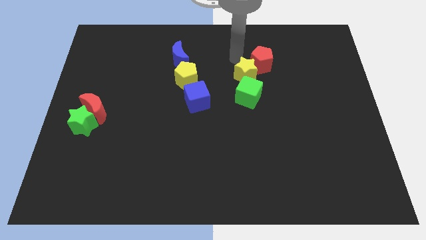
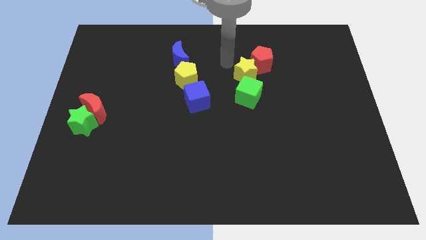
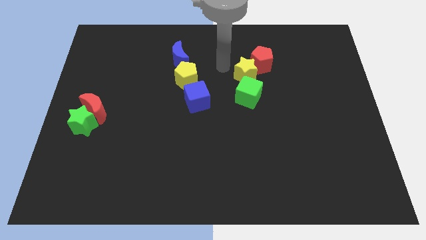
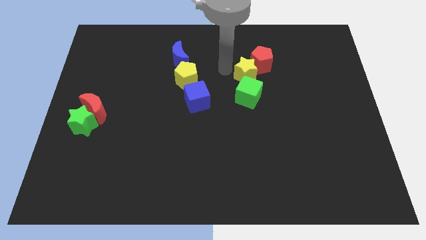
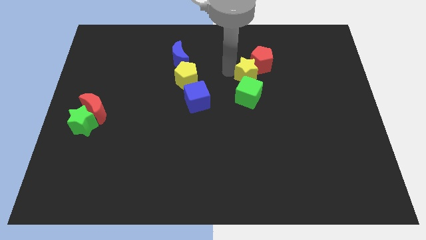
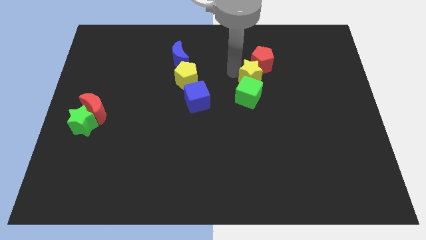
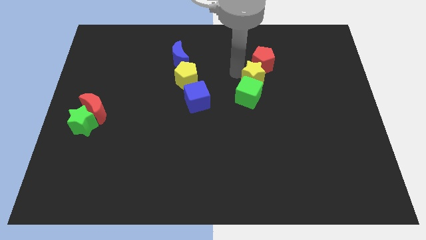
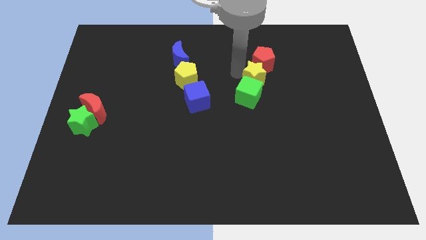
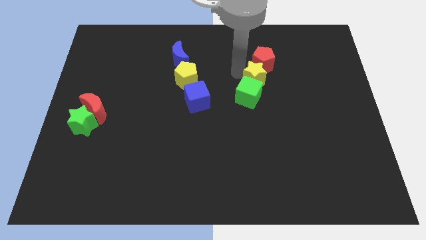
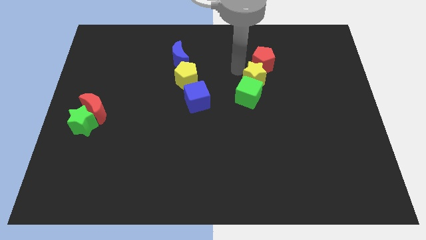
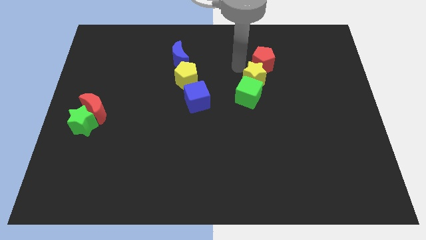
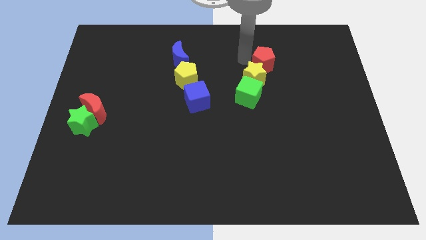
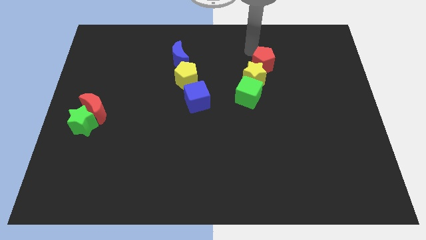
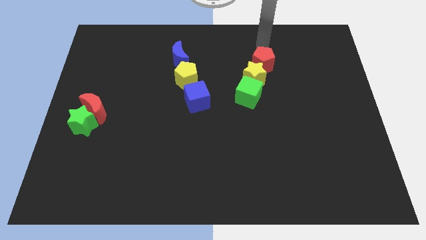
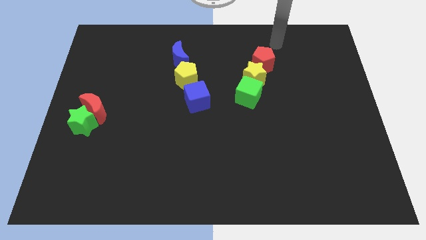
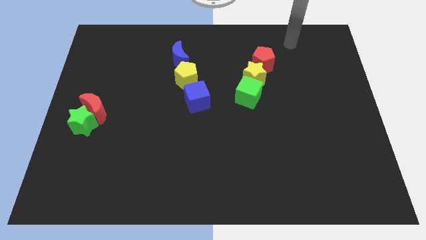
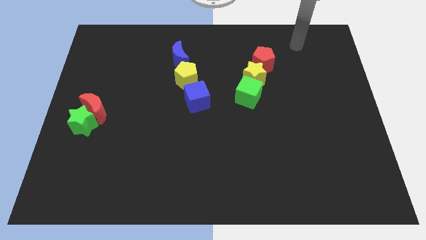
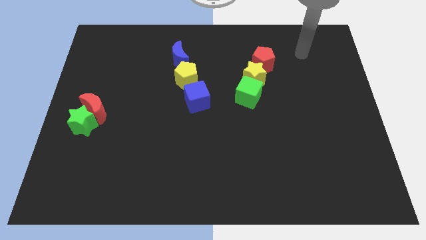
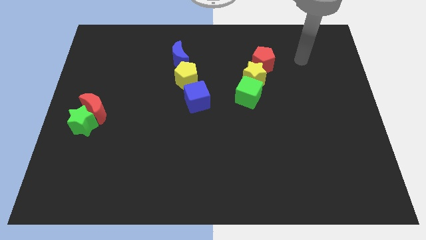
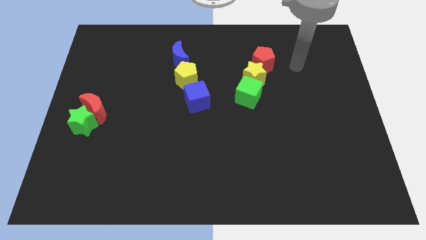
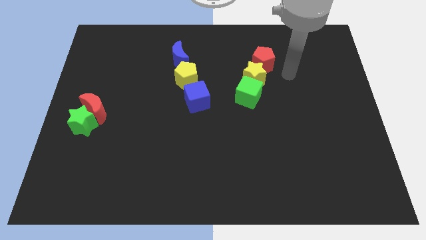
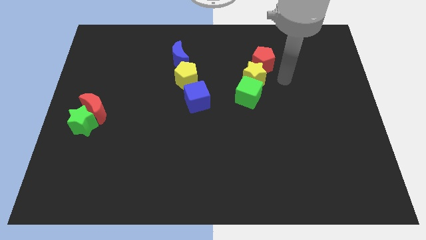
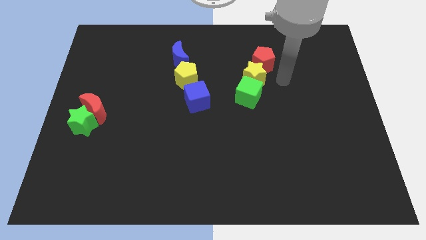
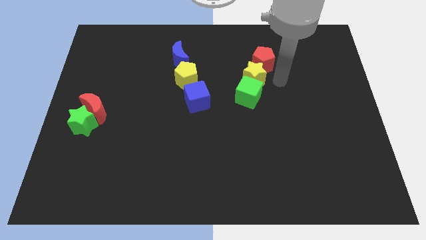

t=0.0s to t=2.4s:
adjust the yellow star to form a line

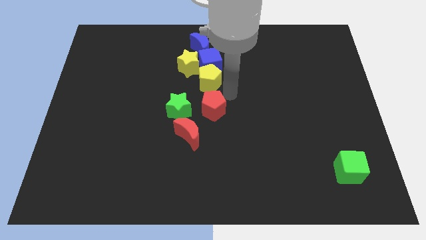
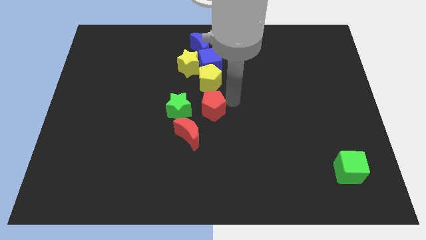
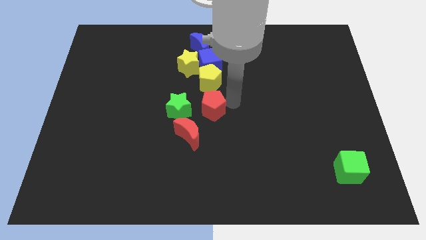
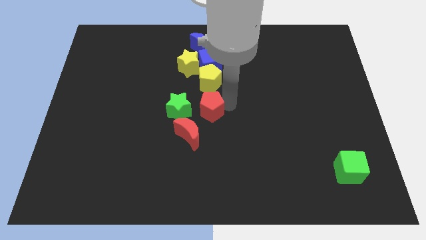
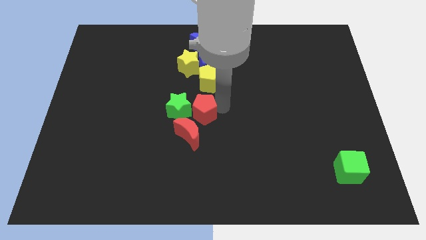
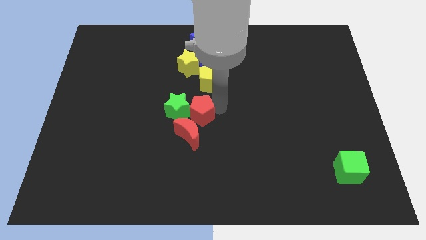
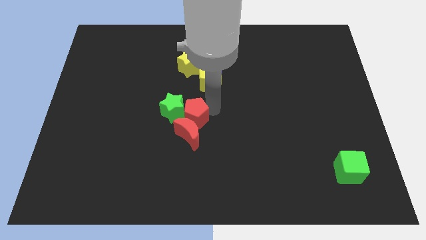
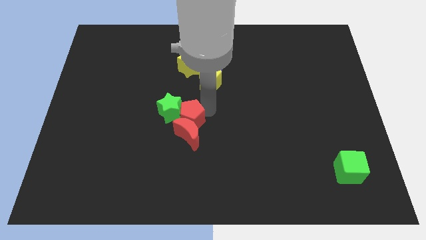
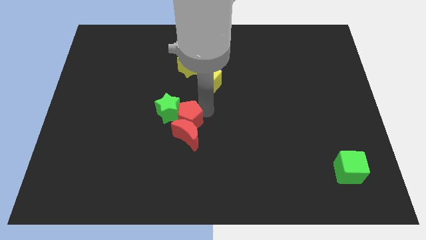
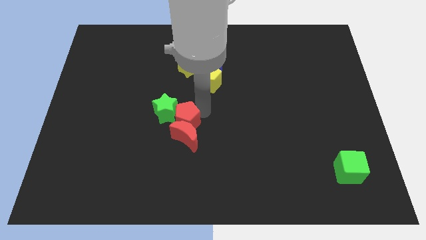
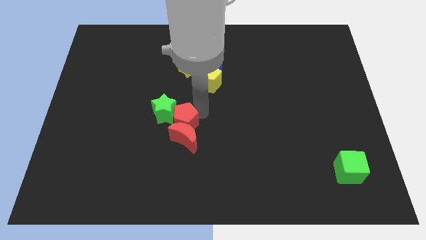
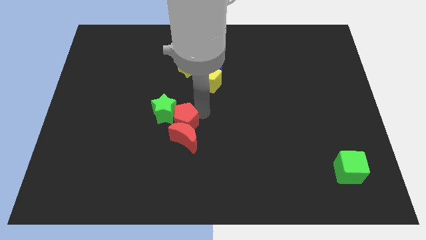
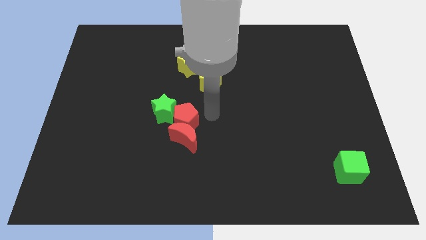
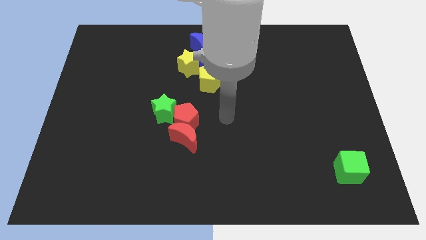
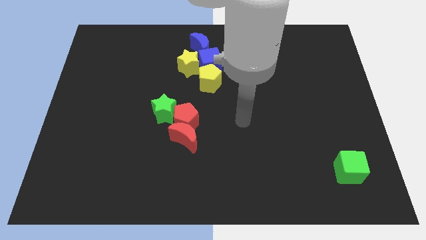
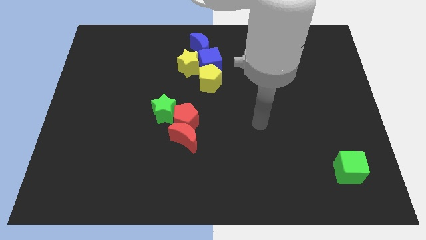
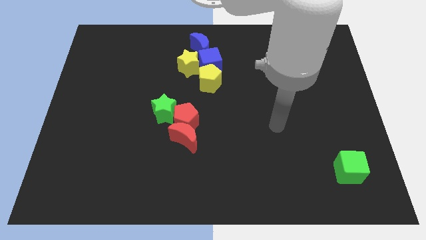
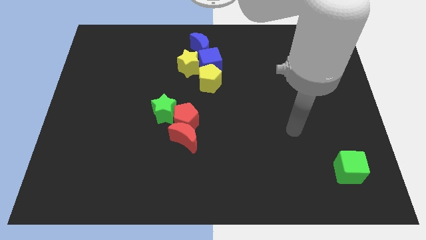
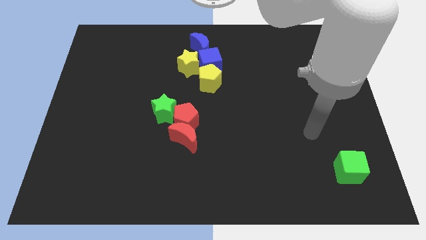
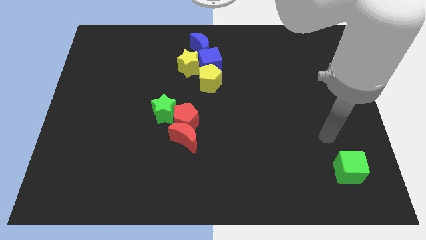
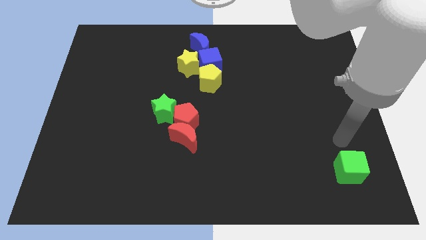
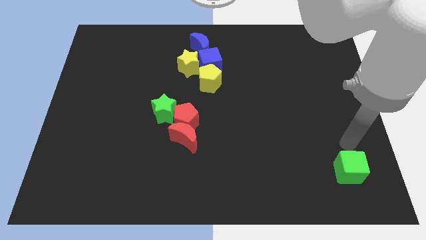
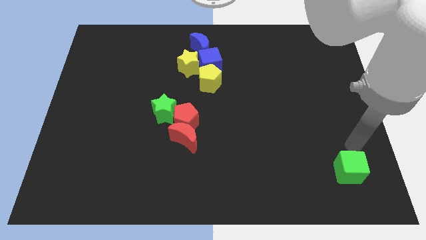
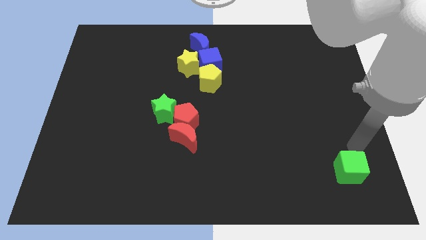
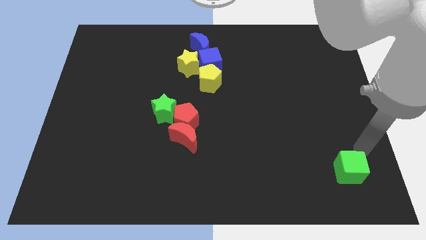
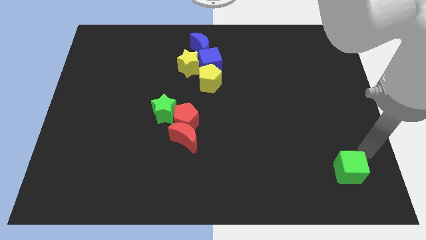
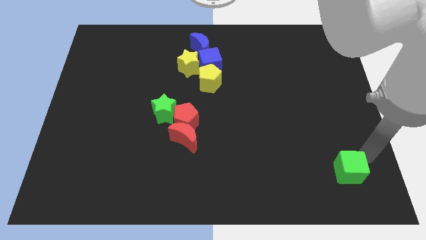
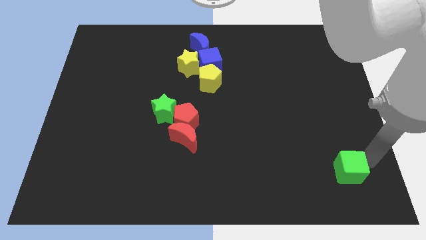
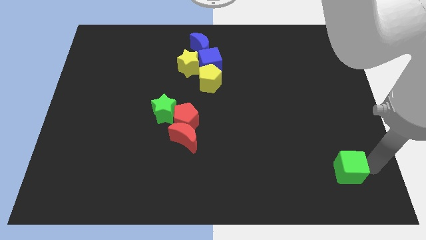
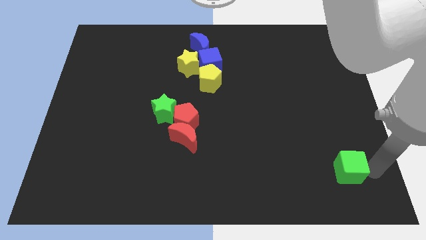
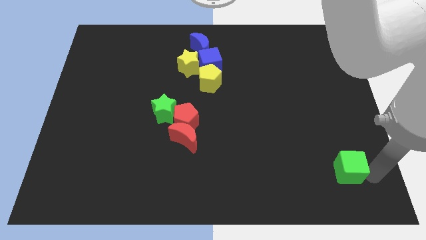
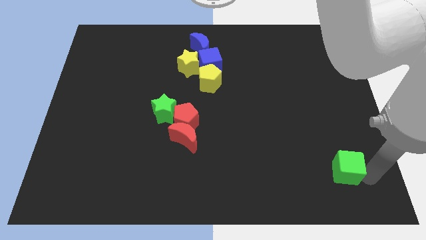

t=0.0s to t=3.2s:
push the red pentagon into red moon and move away

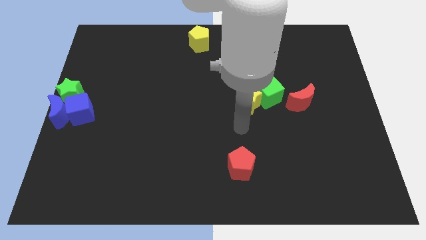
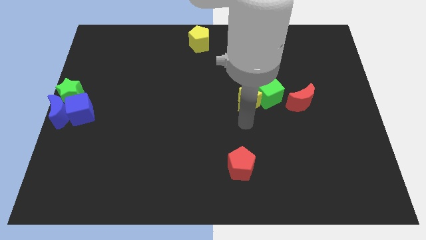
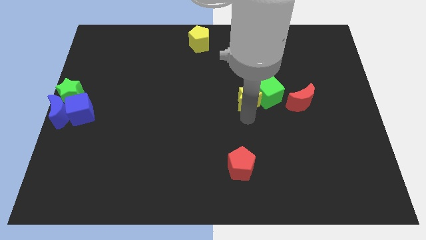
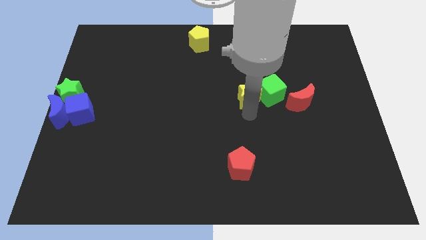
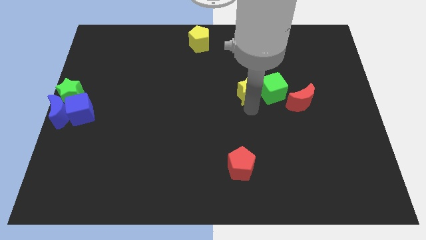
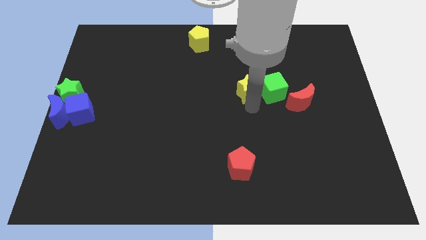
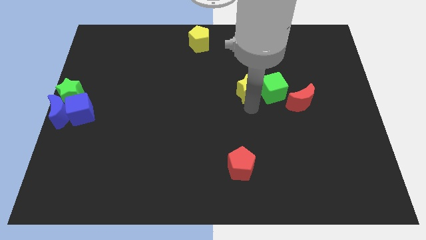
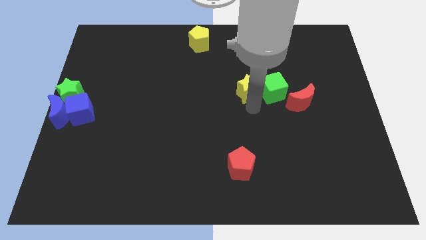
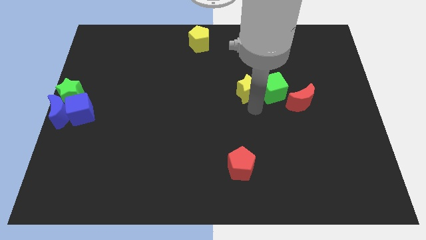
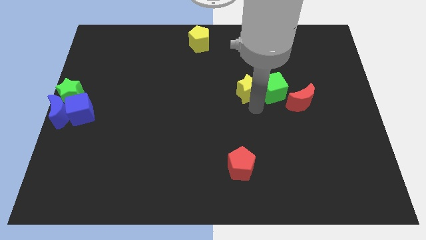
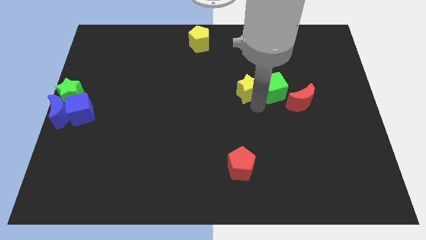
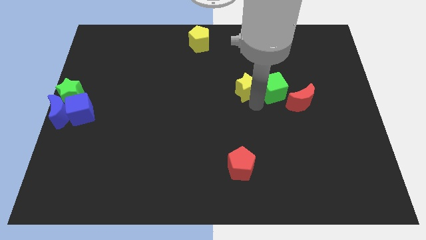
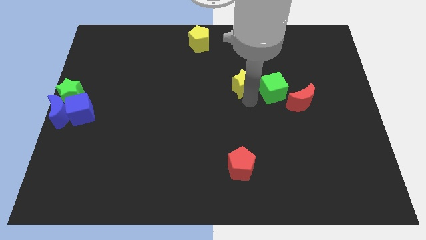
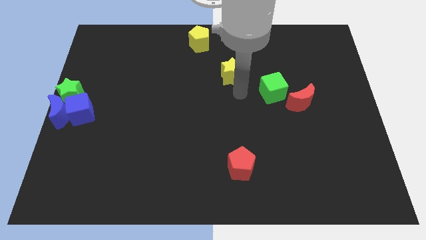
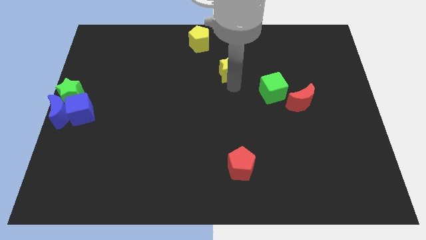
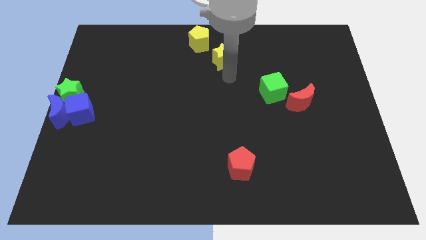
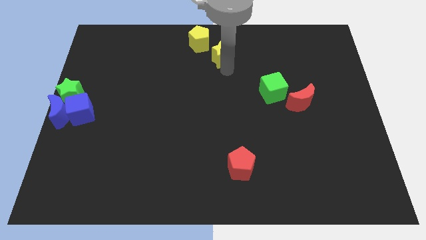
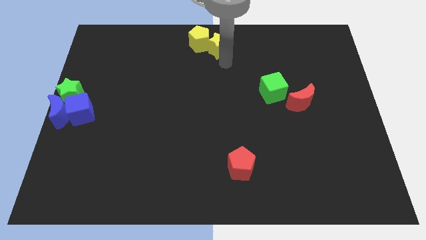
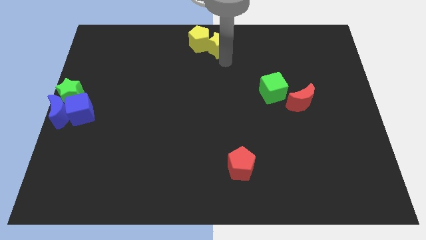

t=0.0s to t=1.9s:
separate the yellow star from the green cube

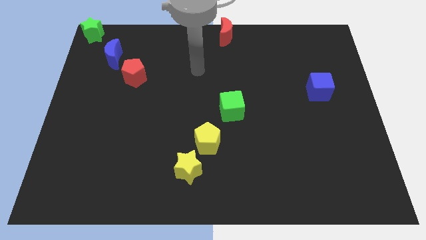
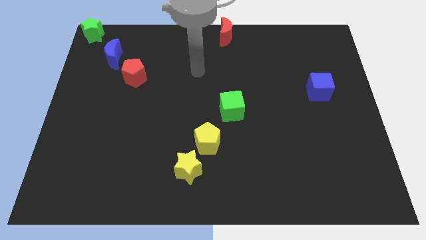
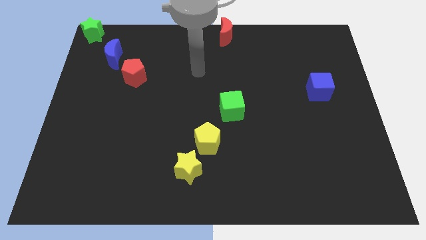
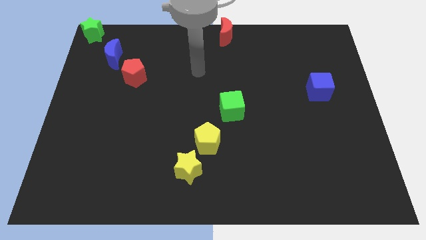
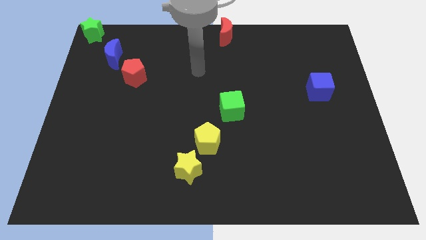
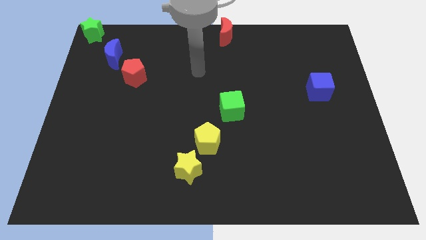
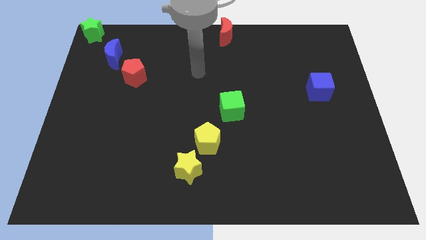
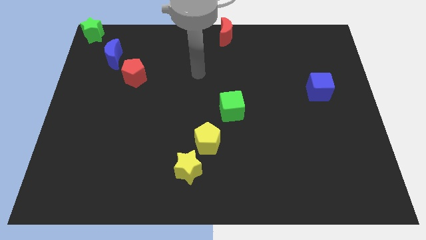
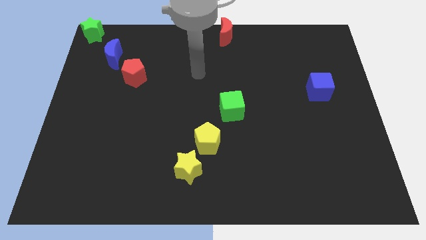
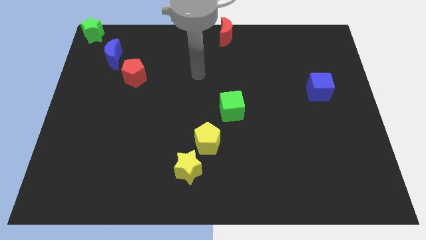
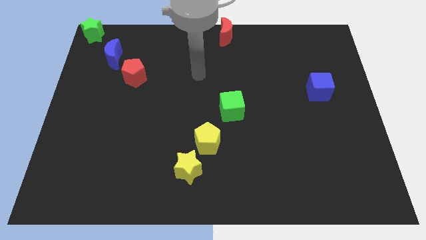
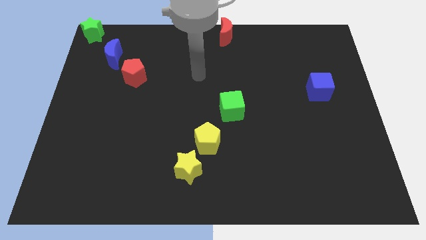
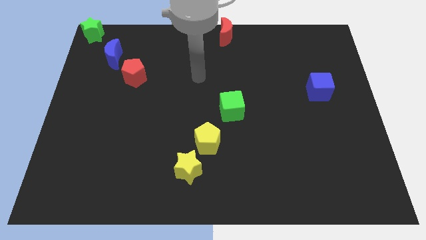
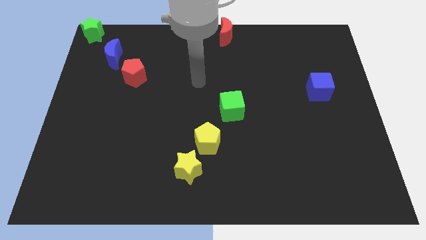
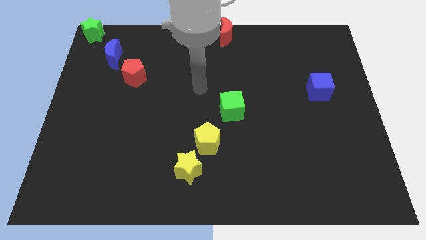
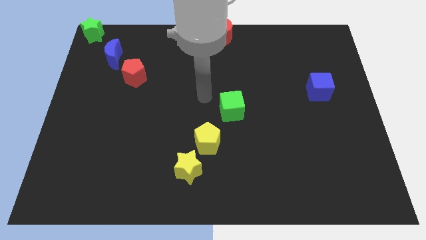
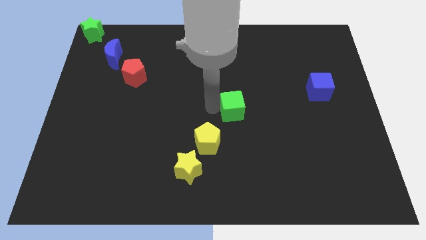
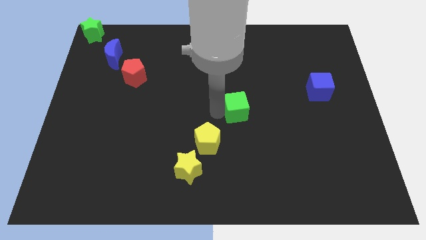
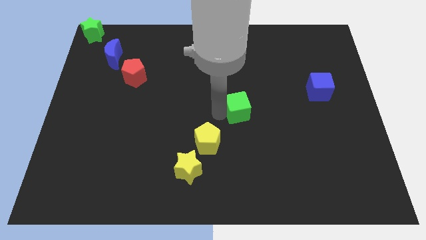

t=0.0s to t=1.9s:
move your arm to the green cube
